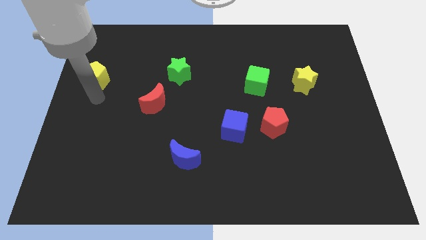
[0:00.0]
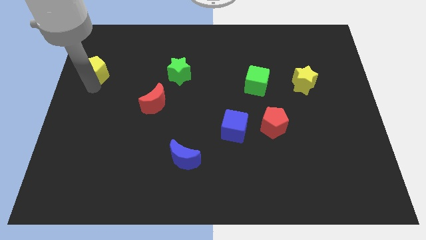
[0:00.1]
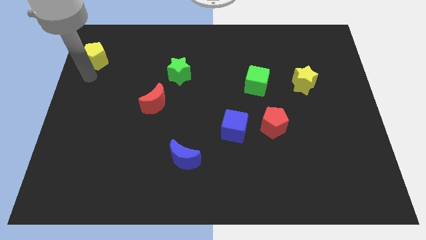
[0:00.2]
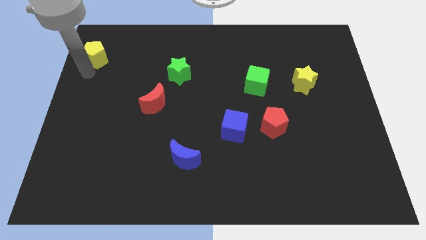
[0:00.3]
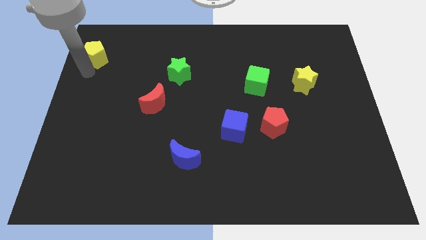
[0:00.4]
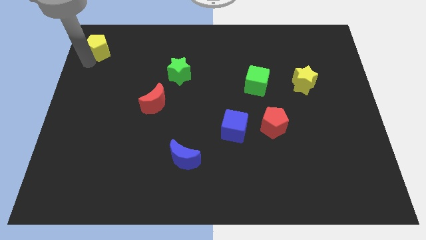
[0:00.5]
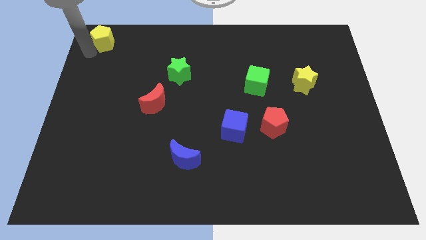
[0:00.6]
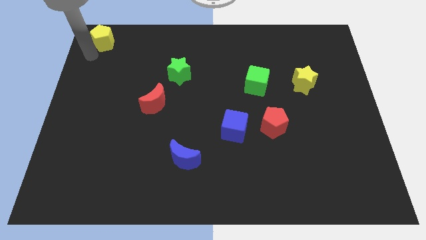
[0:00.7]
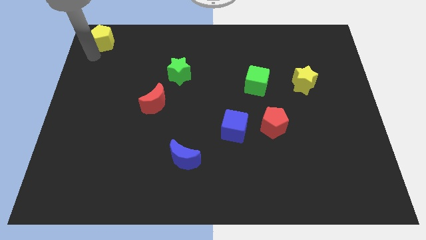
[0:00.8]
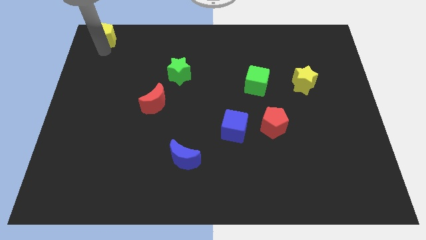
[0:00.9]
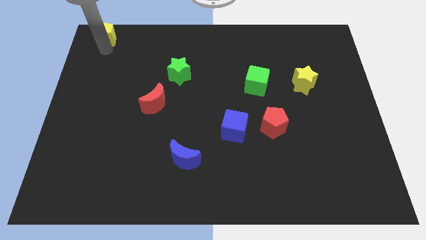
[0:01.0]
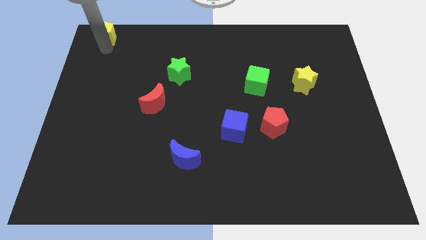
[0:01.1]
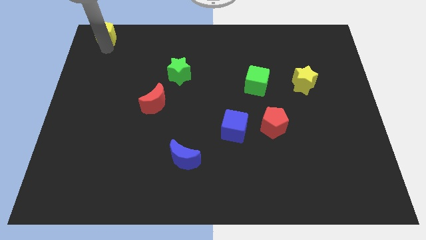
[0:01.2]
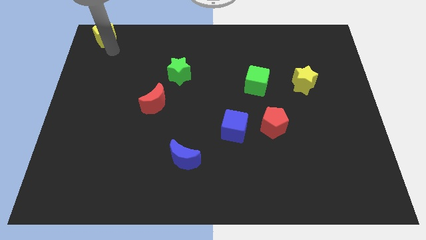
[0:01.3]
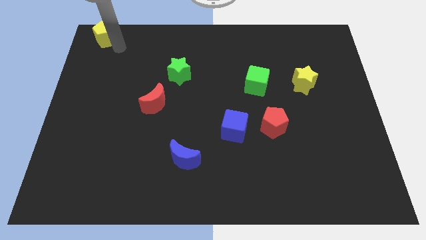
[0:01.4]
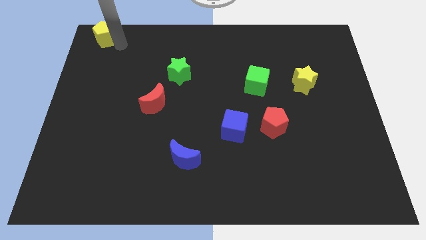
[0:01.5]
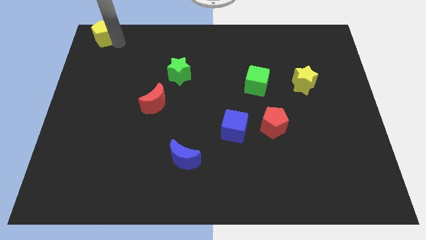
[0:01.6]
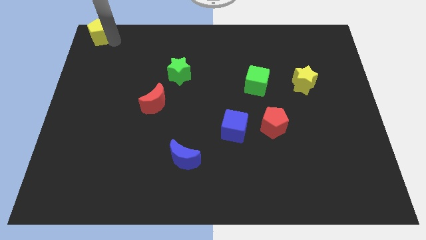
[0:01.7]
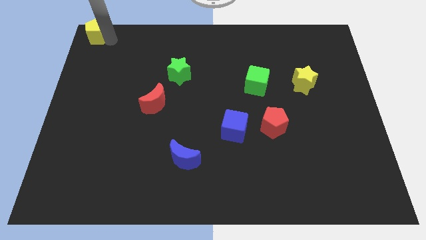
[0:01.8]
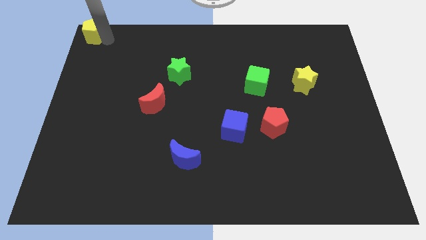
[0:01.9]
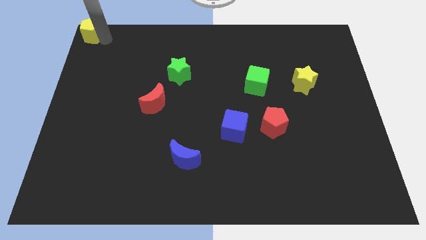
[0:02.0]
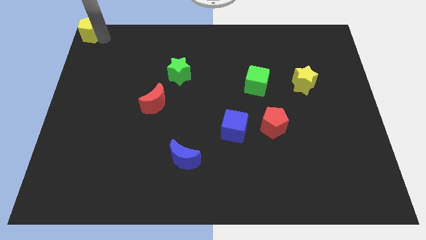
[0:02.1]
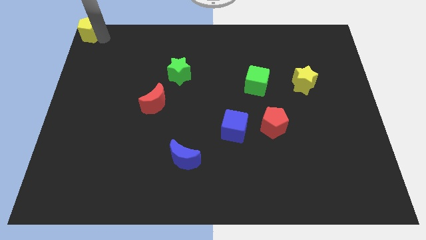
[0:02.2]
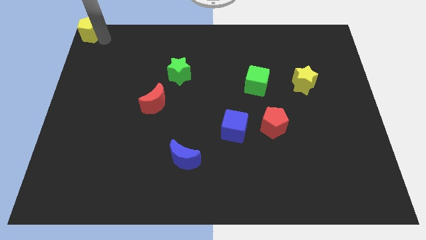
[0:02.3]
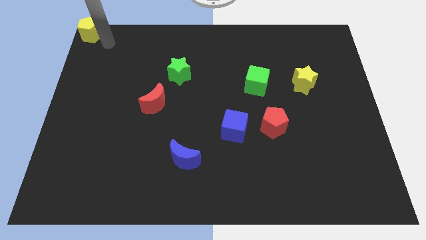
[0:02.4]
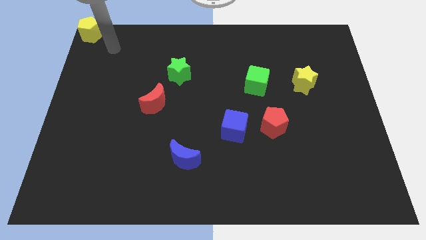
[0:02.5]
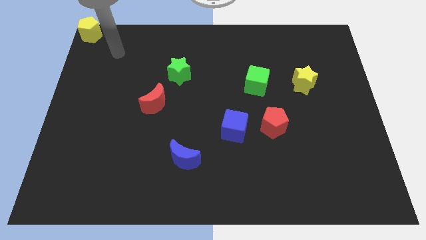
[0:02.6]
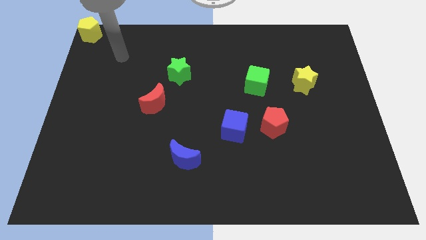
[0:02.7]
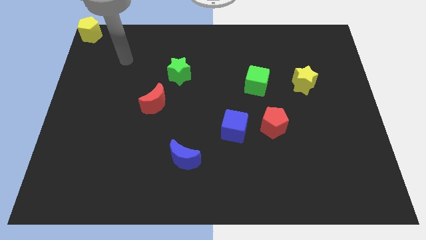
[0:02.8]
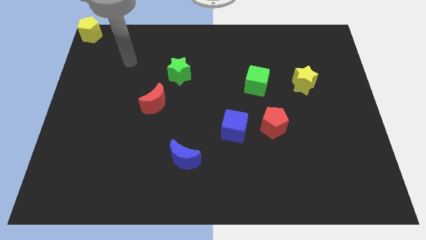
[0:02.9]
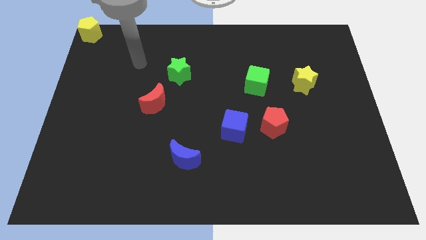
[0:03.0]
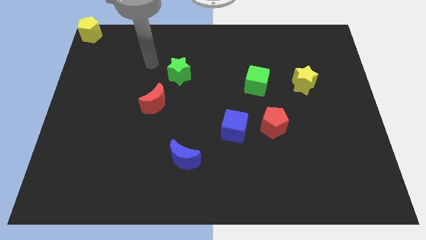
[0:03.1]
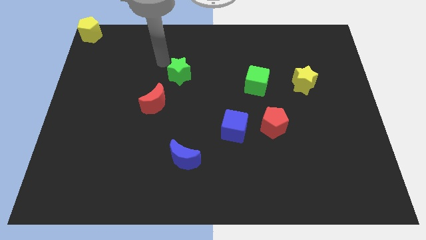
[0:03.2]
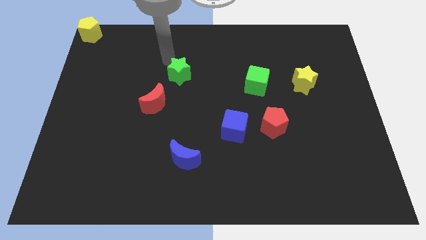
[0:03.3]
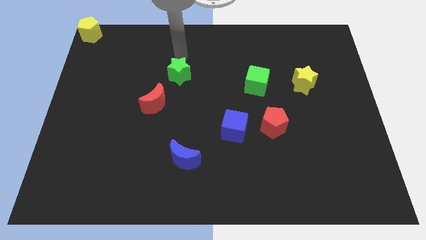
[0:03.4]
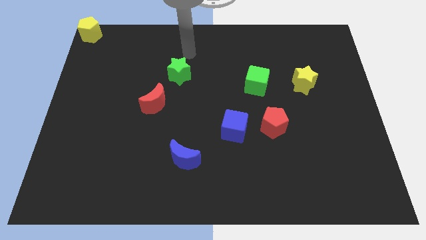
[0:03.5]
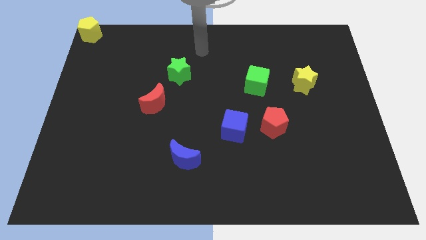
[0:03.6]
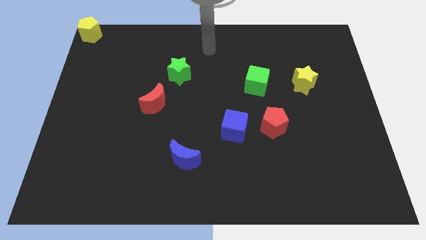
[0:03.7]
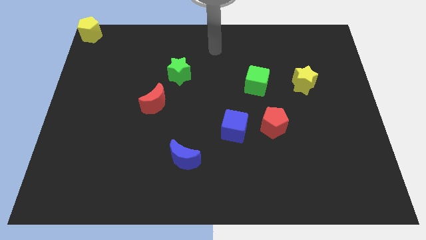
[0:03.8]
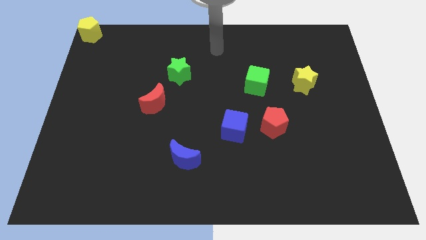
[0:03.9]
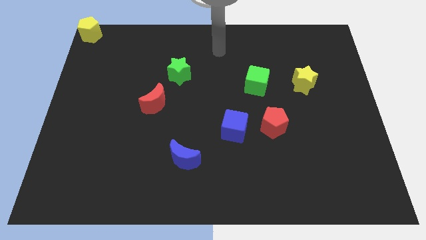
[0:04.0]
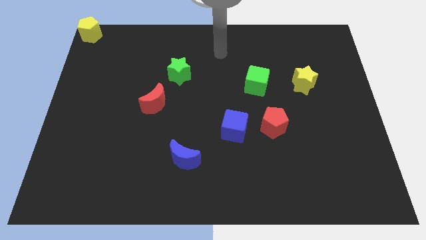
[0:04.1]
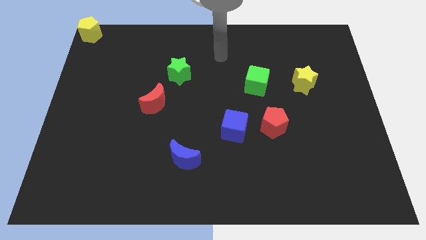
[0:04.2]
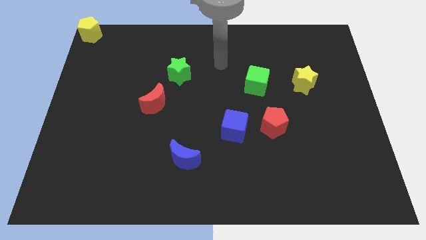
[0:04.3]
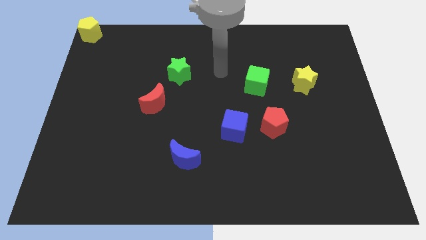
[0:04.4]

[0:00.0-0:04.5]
move the yellow pentagon to top left corner of the board

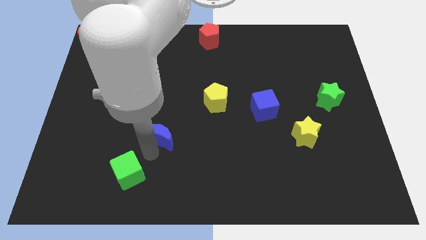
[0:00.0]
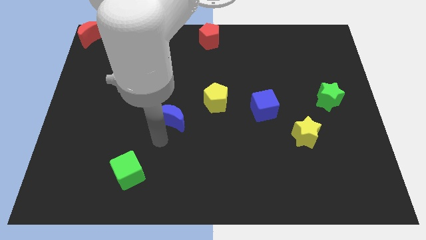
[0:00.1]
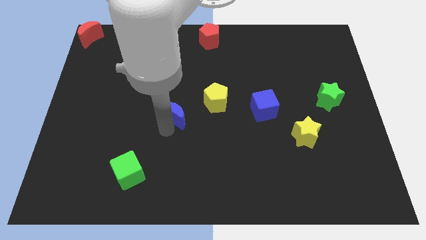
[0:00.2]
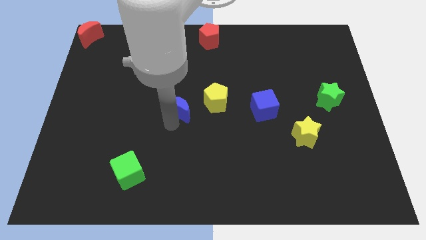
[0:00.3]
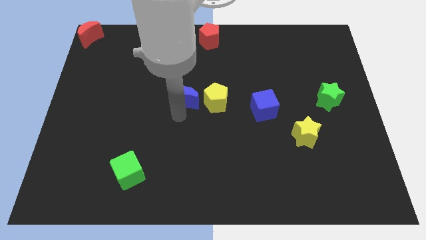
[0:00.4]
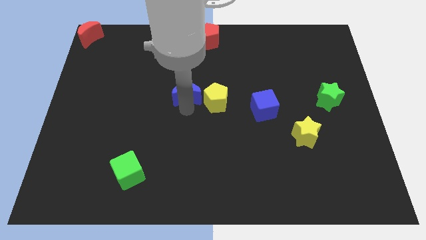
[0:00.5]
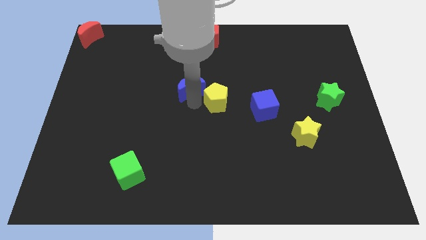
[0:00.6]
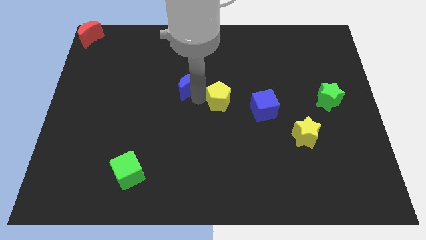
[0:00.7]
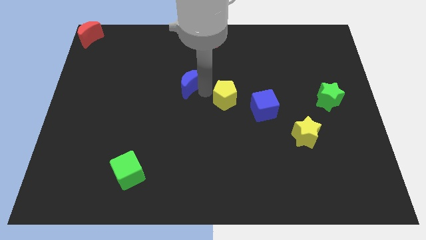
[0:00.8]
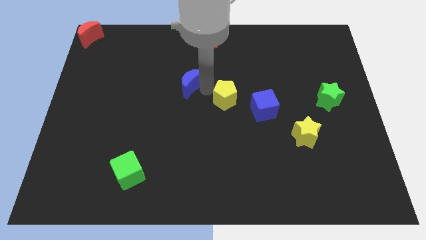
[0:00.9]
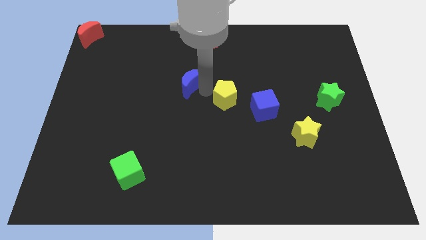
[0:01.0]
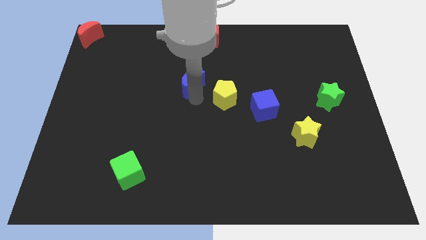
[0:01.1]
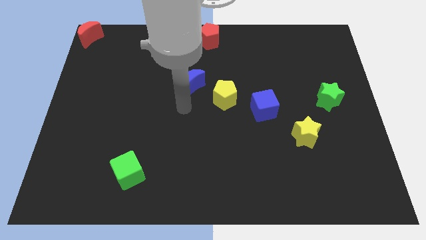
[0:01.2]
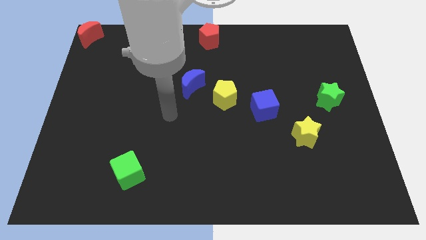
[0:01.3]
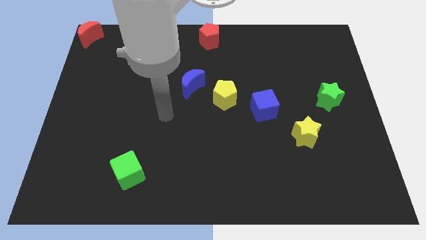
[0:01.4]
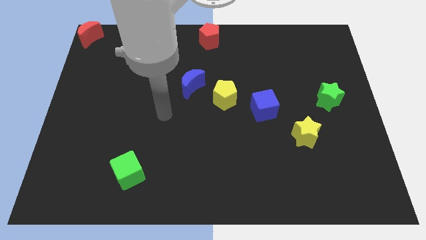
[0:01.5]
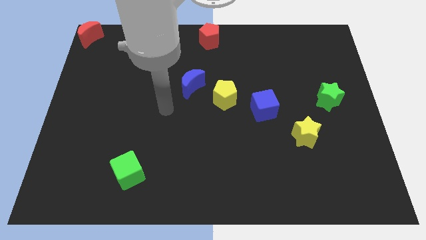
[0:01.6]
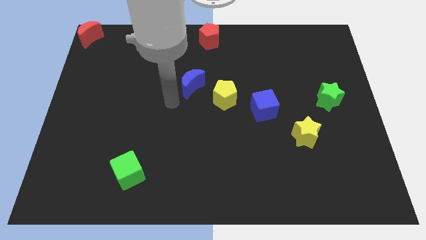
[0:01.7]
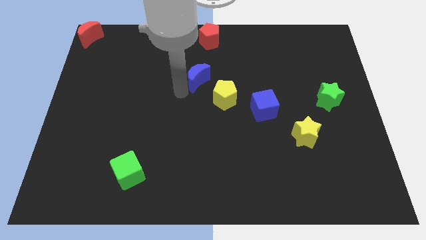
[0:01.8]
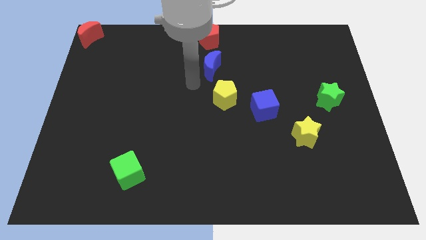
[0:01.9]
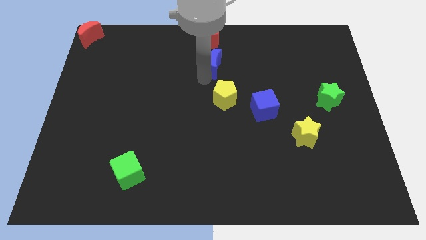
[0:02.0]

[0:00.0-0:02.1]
place blue moon in between the red and yellow pentagon

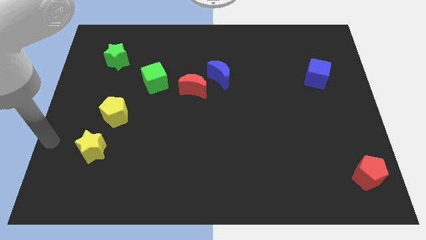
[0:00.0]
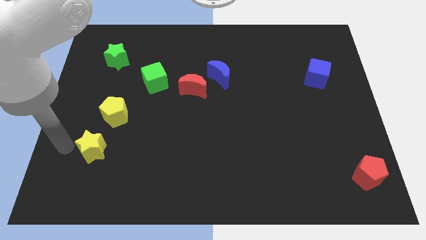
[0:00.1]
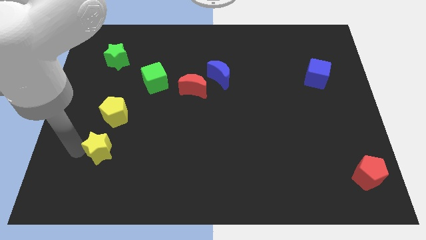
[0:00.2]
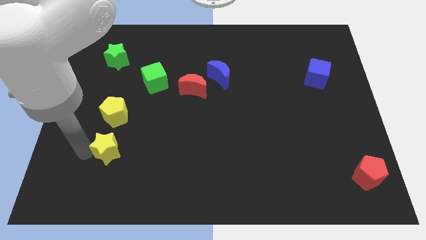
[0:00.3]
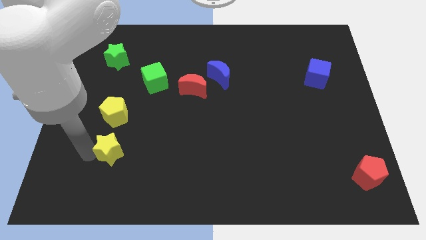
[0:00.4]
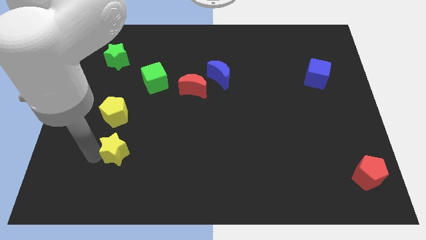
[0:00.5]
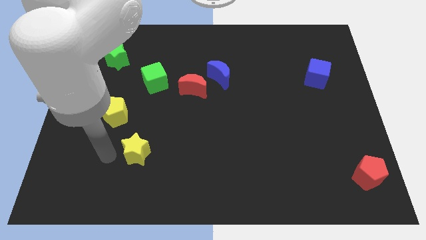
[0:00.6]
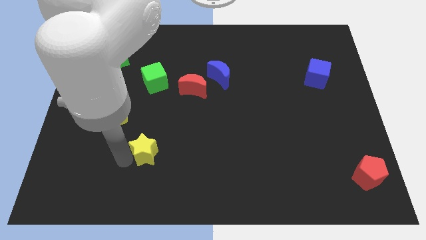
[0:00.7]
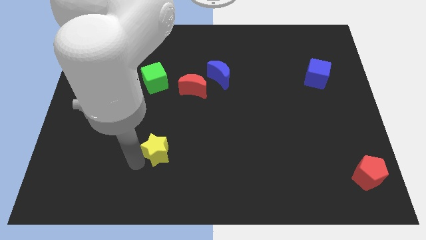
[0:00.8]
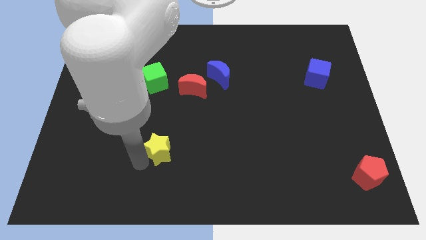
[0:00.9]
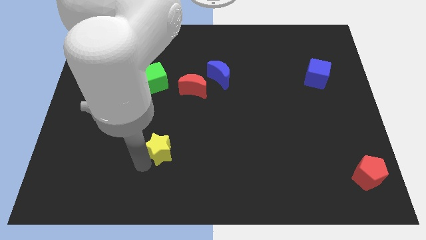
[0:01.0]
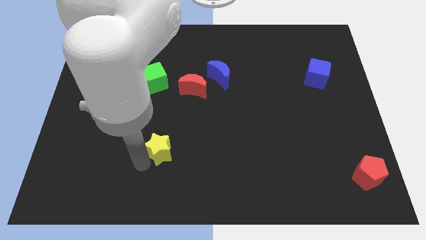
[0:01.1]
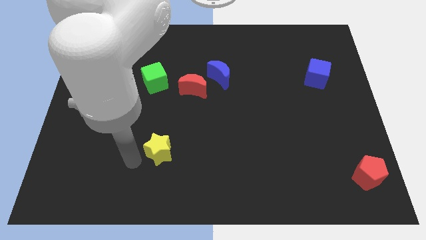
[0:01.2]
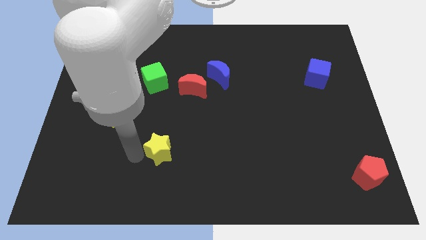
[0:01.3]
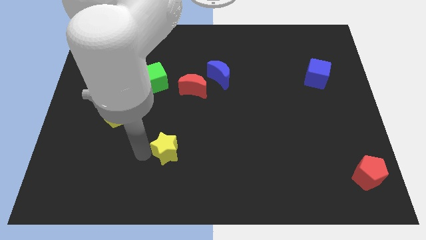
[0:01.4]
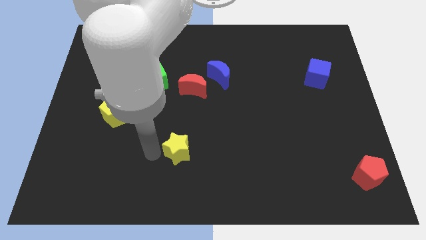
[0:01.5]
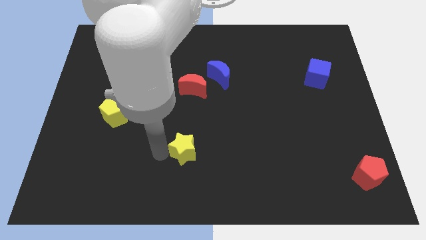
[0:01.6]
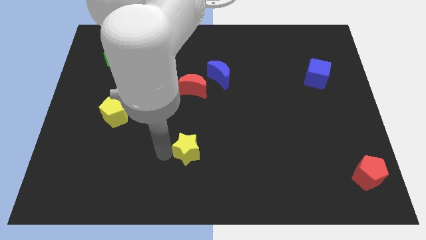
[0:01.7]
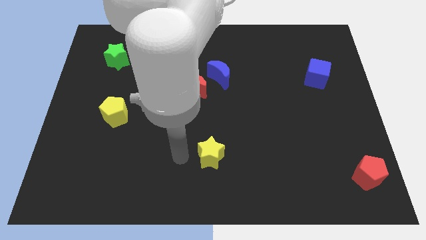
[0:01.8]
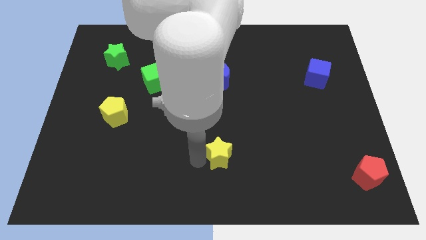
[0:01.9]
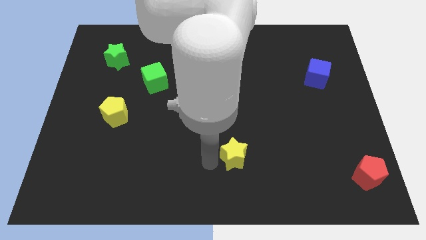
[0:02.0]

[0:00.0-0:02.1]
push the yellow star to the right

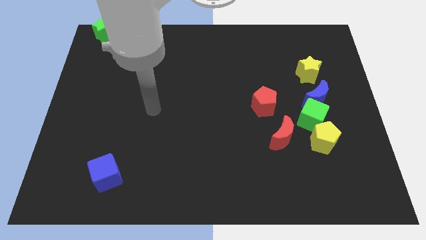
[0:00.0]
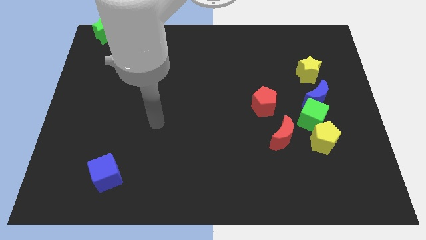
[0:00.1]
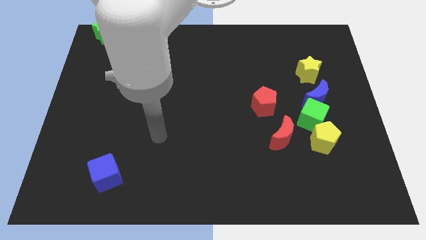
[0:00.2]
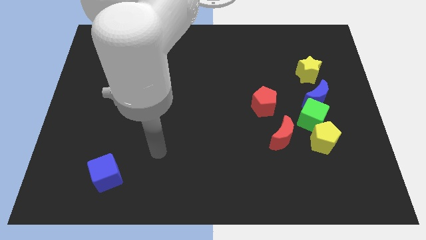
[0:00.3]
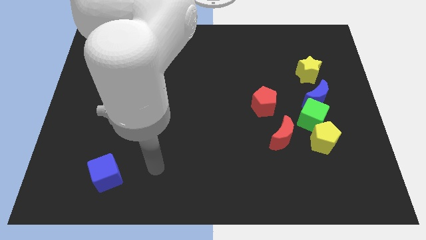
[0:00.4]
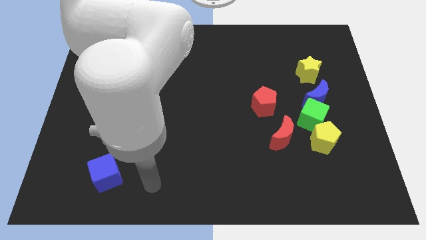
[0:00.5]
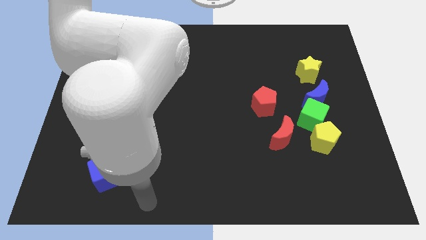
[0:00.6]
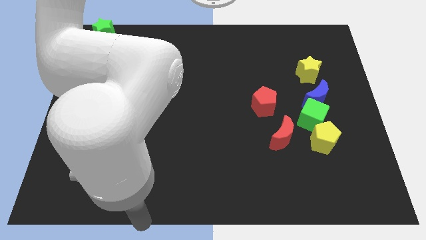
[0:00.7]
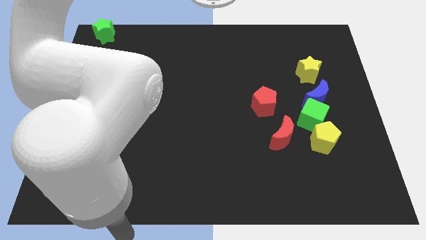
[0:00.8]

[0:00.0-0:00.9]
place arm at bottom
